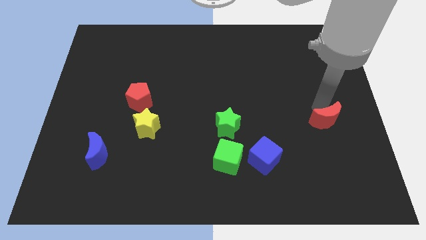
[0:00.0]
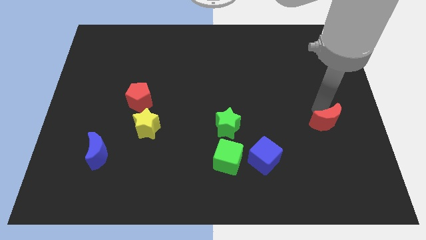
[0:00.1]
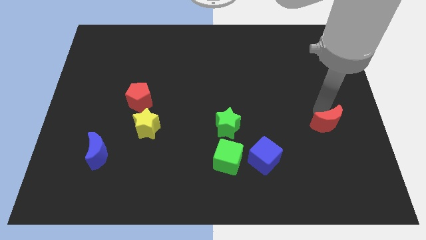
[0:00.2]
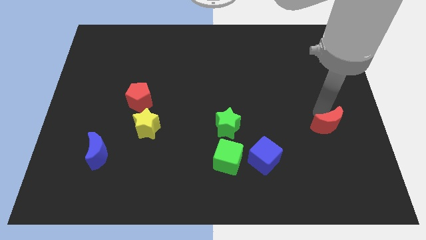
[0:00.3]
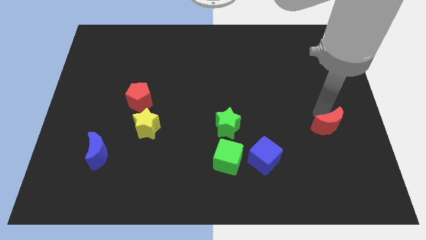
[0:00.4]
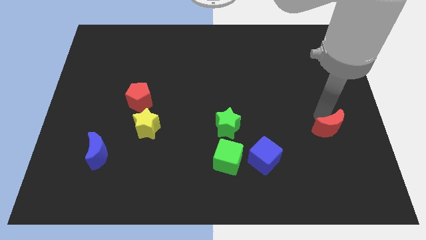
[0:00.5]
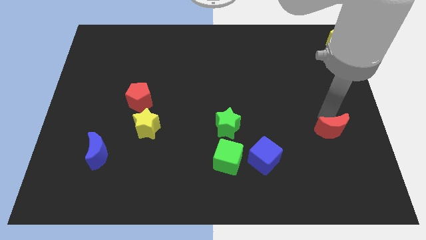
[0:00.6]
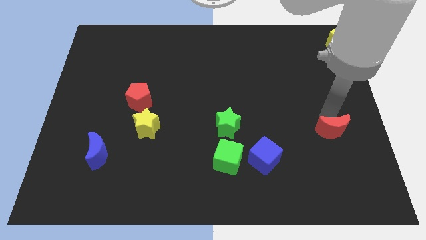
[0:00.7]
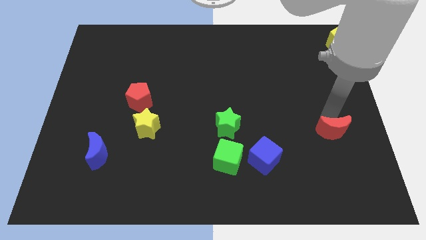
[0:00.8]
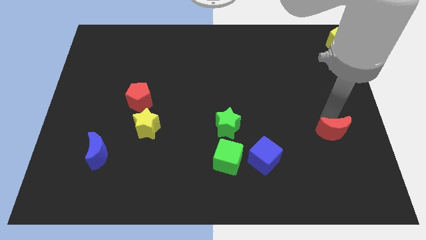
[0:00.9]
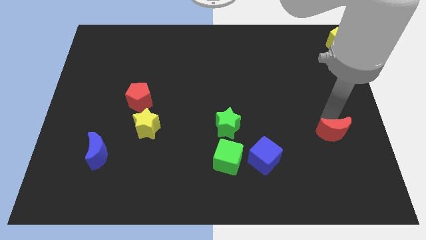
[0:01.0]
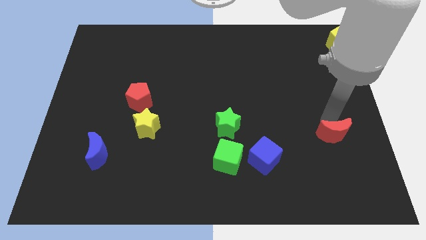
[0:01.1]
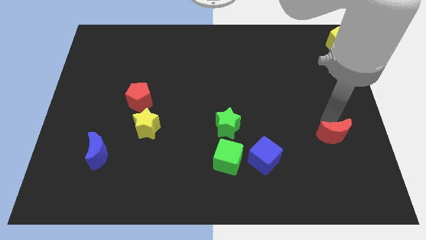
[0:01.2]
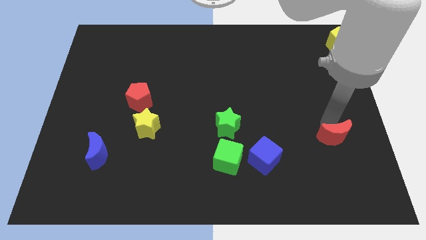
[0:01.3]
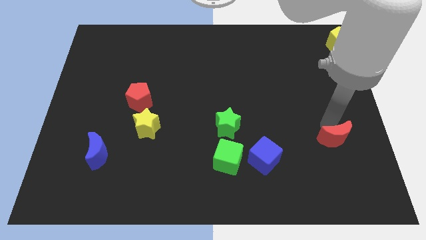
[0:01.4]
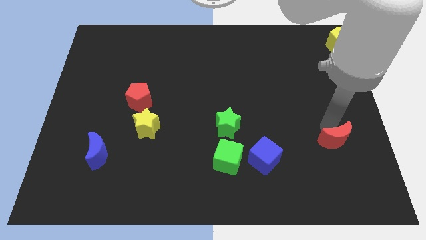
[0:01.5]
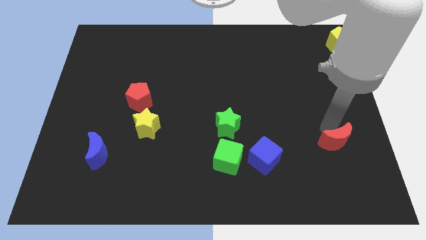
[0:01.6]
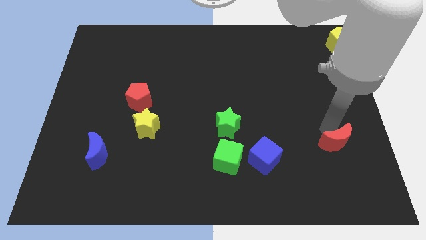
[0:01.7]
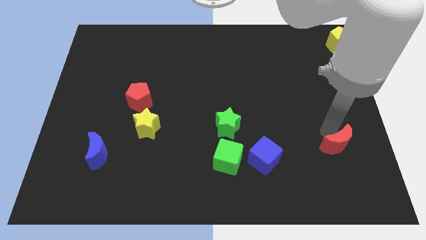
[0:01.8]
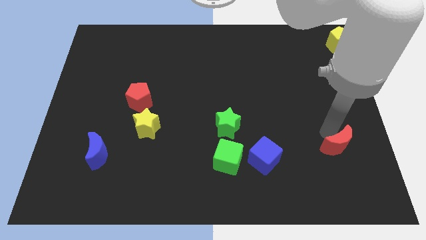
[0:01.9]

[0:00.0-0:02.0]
push the red crescent downwards

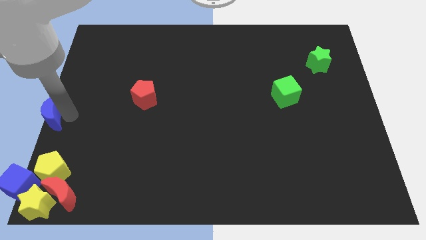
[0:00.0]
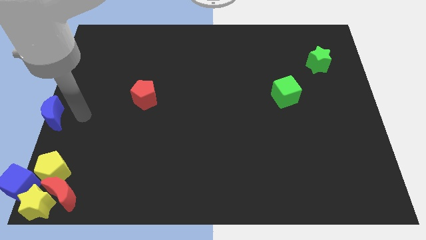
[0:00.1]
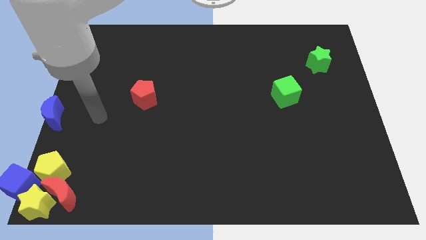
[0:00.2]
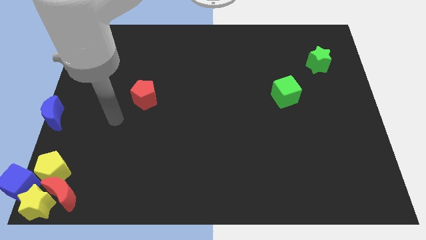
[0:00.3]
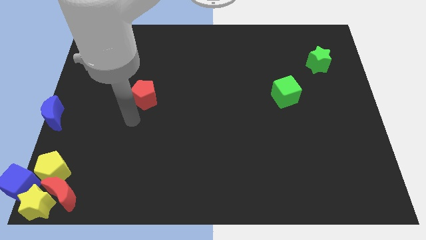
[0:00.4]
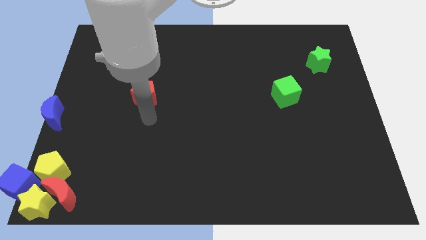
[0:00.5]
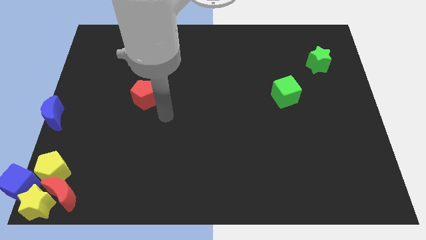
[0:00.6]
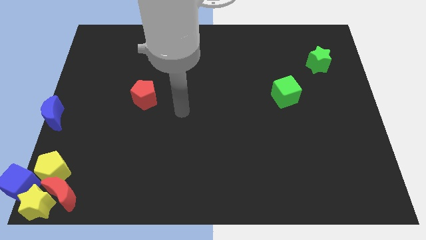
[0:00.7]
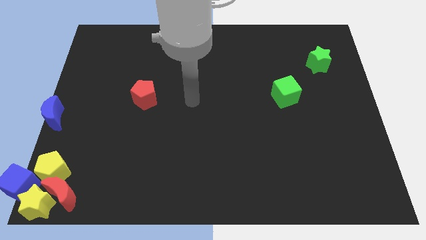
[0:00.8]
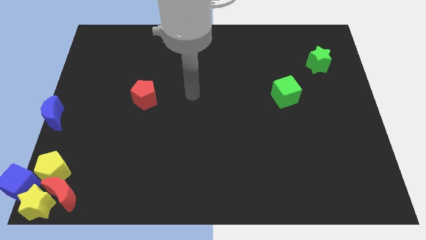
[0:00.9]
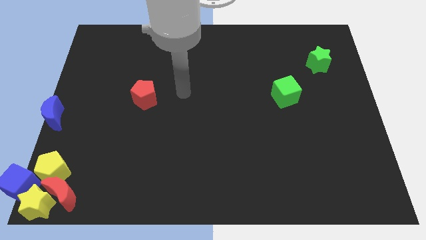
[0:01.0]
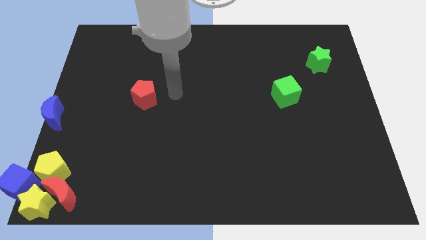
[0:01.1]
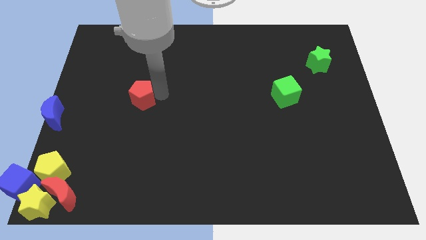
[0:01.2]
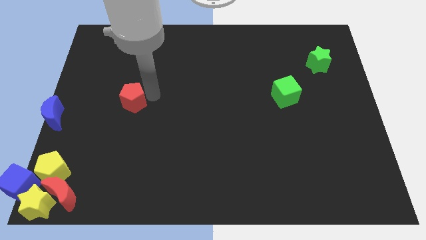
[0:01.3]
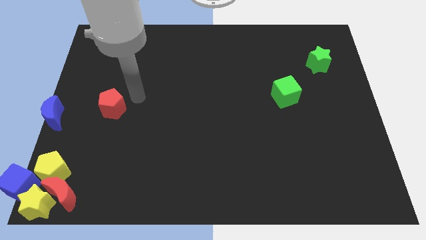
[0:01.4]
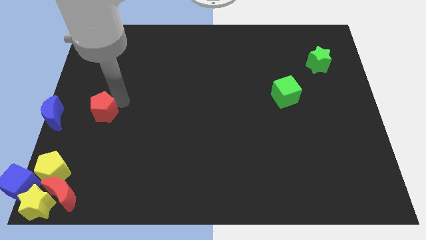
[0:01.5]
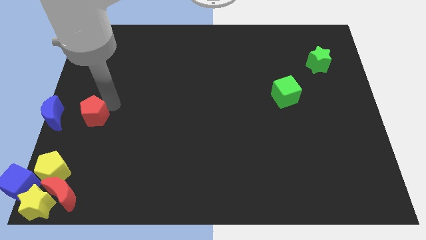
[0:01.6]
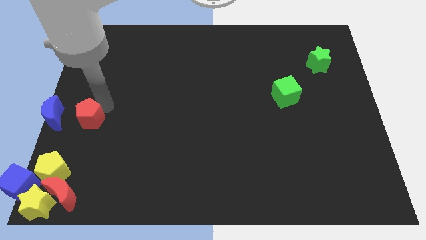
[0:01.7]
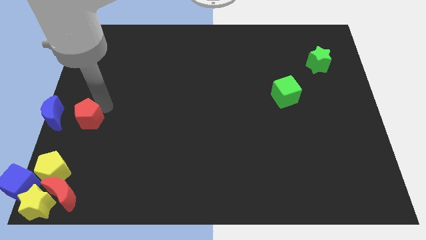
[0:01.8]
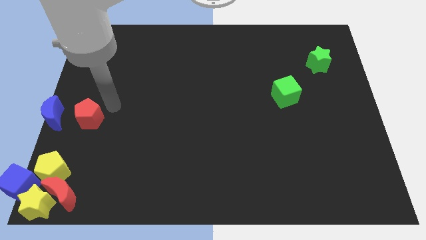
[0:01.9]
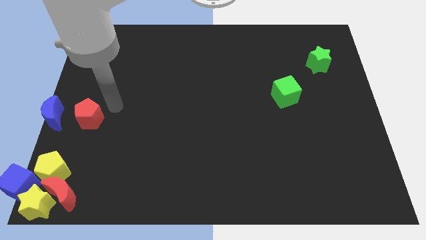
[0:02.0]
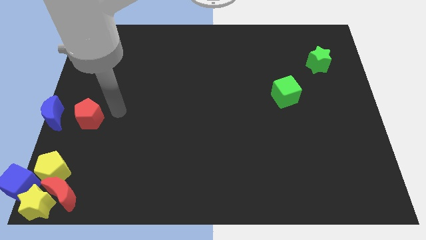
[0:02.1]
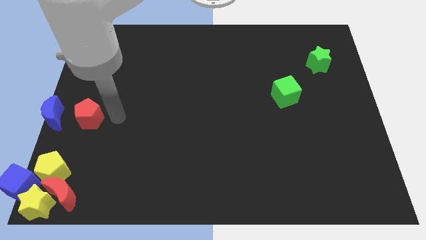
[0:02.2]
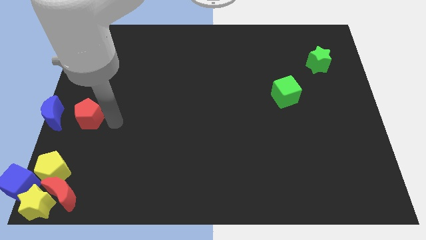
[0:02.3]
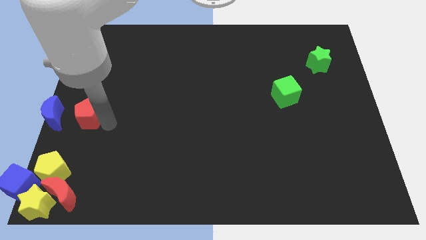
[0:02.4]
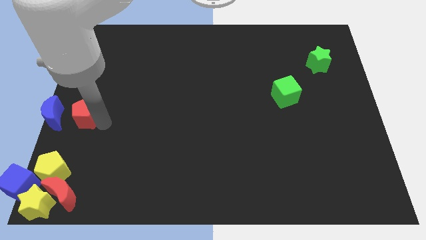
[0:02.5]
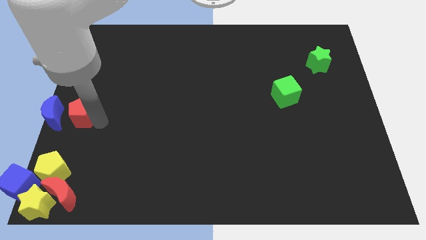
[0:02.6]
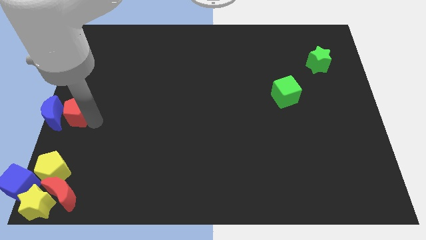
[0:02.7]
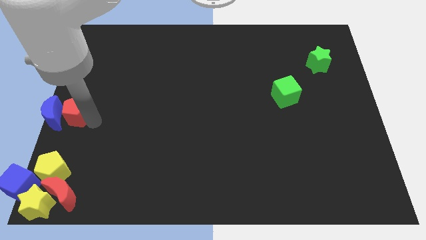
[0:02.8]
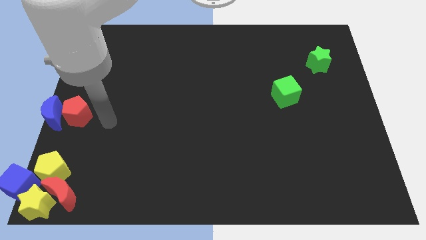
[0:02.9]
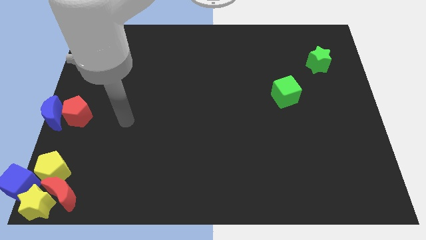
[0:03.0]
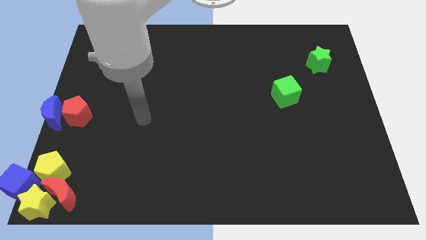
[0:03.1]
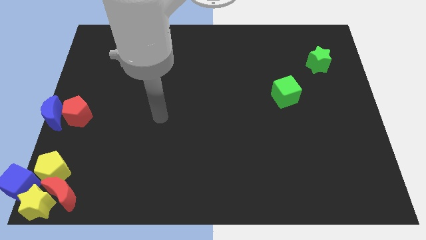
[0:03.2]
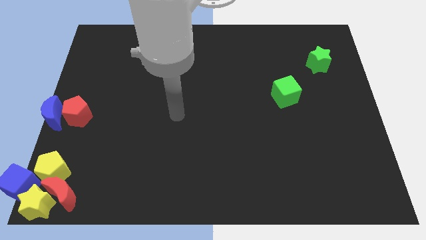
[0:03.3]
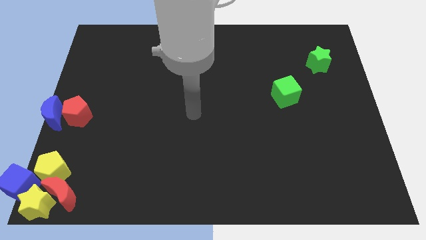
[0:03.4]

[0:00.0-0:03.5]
place red pentagon to the right of blue moon

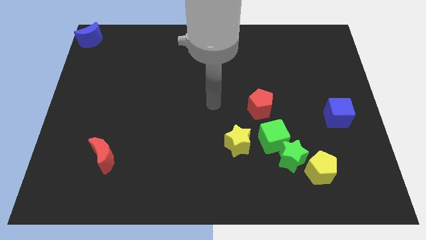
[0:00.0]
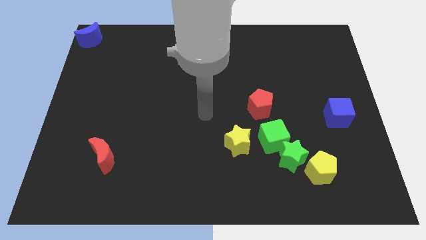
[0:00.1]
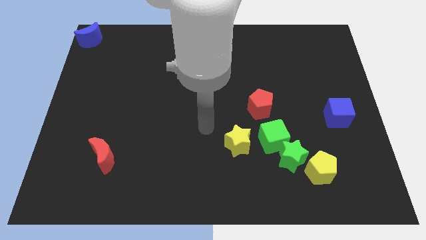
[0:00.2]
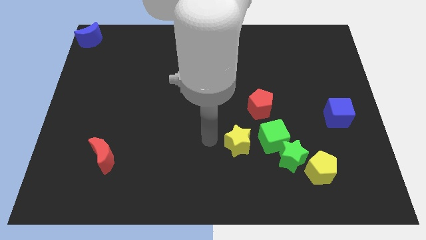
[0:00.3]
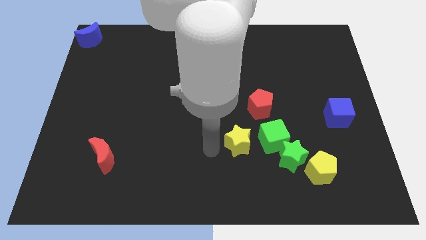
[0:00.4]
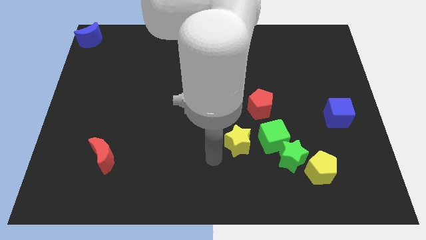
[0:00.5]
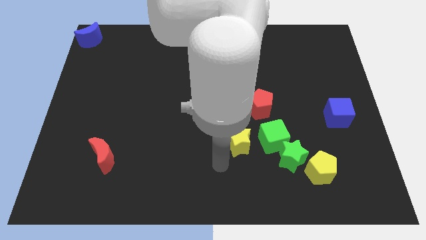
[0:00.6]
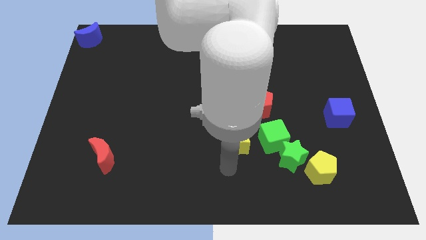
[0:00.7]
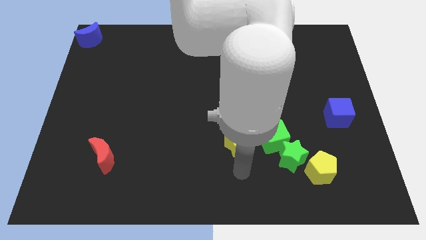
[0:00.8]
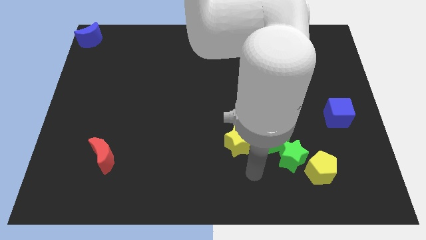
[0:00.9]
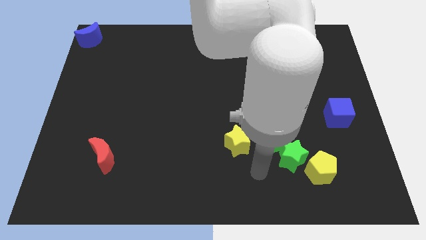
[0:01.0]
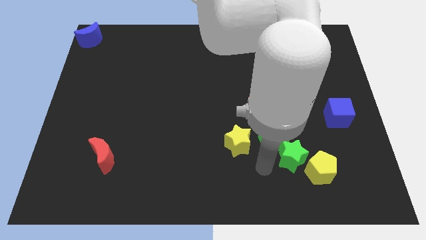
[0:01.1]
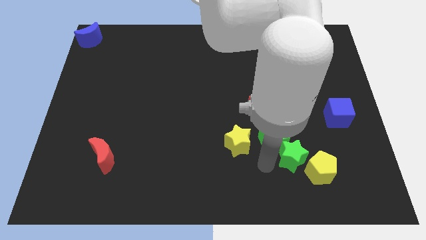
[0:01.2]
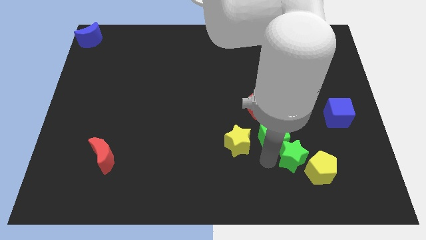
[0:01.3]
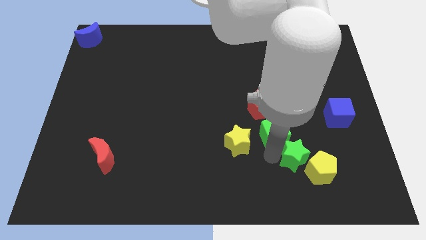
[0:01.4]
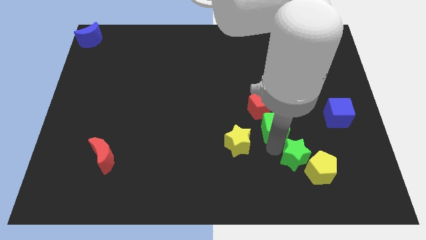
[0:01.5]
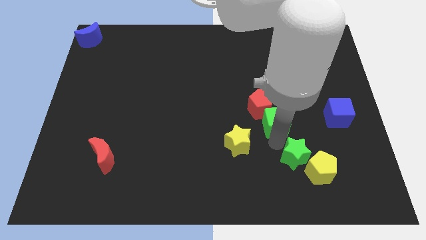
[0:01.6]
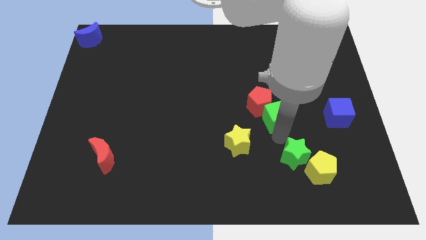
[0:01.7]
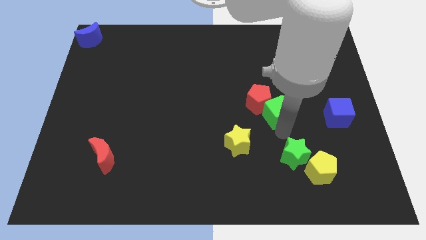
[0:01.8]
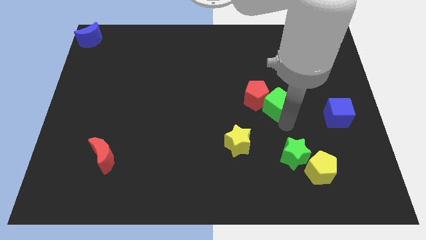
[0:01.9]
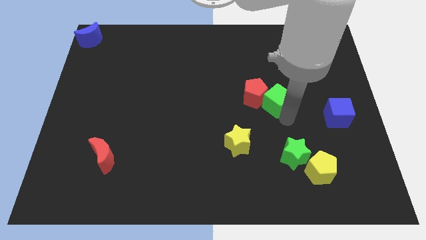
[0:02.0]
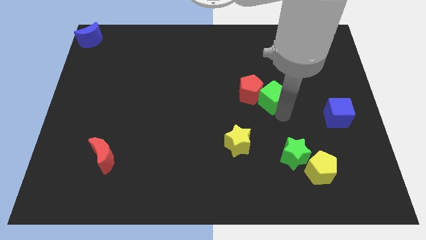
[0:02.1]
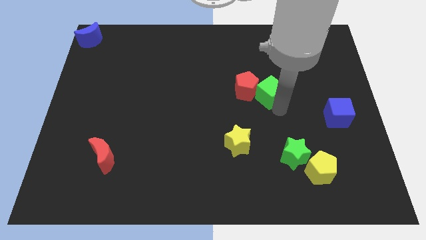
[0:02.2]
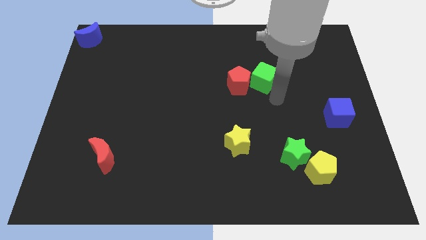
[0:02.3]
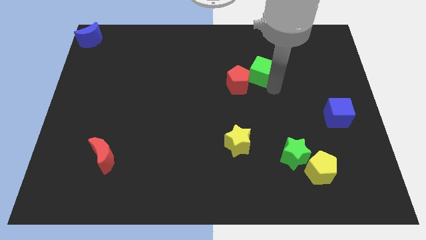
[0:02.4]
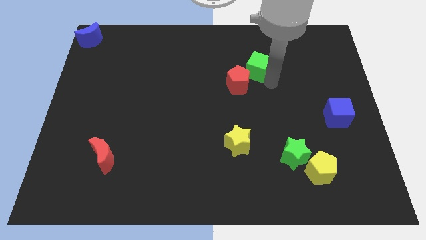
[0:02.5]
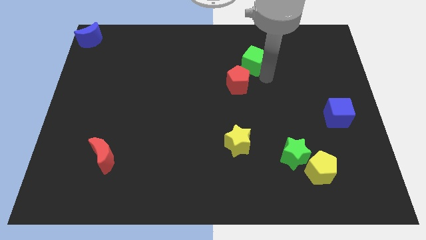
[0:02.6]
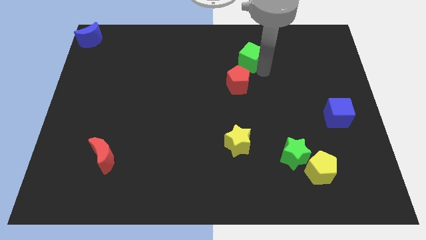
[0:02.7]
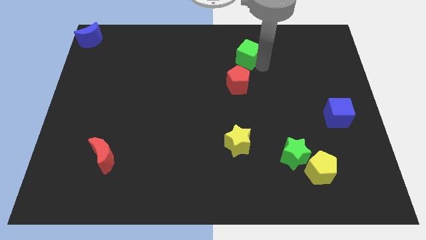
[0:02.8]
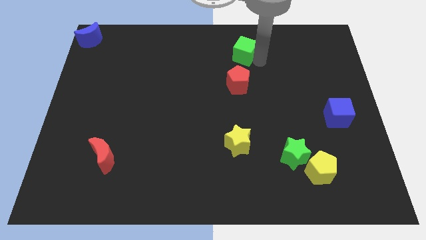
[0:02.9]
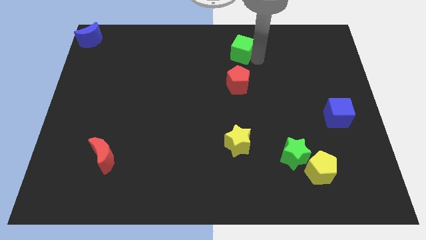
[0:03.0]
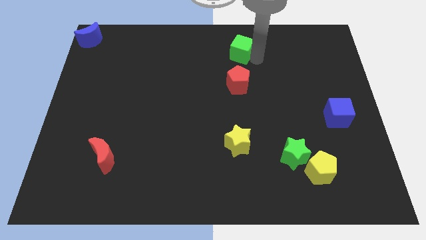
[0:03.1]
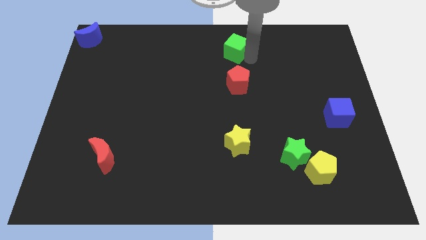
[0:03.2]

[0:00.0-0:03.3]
separate the green cube and red pentagon

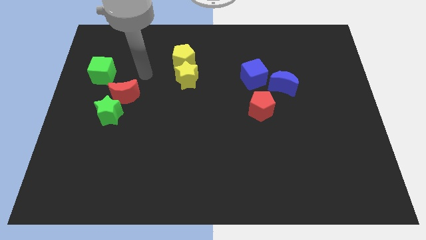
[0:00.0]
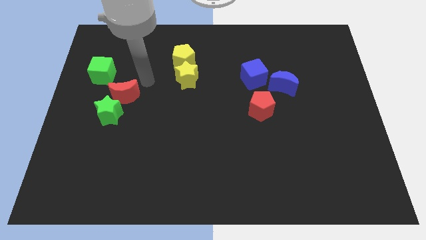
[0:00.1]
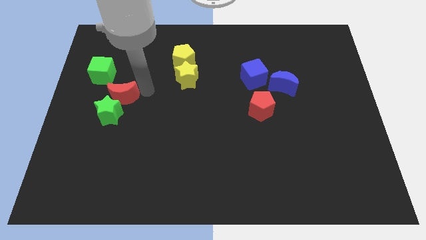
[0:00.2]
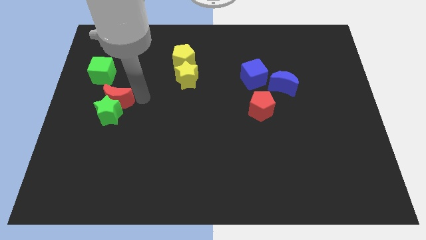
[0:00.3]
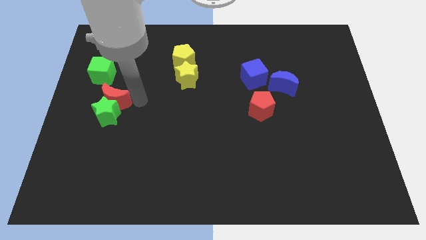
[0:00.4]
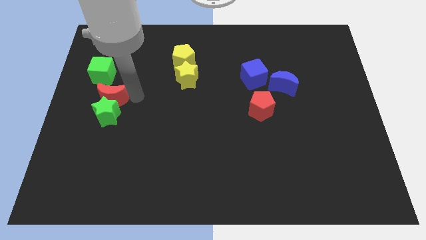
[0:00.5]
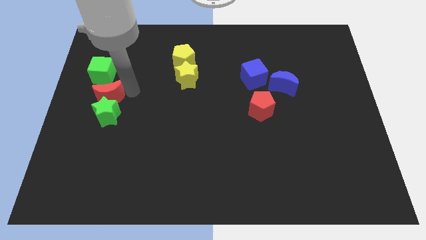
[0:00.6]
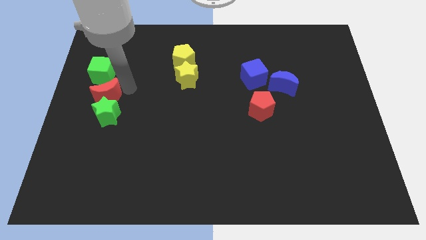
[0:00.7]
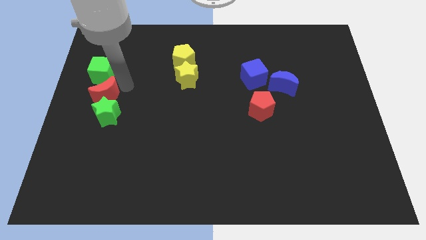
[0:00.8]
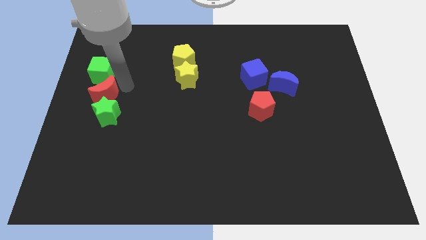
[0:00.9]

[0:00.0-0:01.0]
place red crescent in between green blocks
